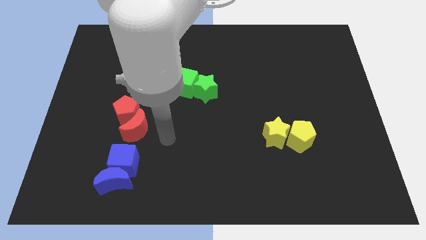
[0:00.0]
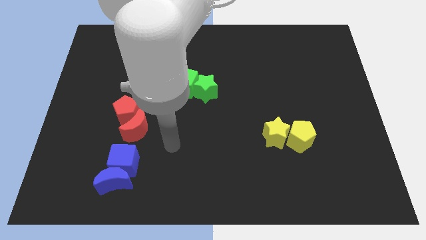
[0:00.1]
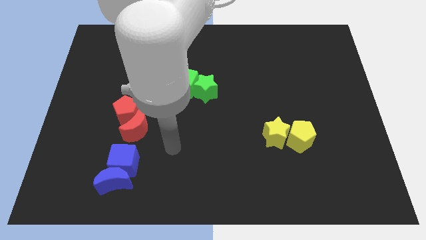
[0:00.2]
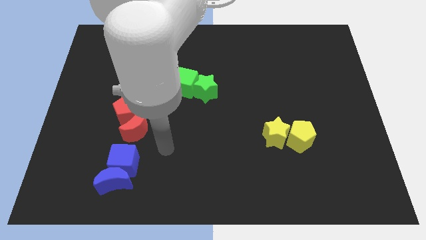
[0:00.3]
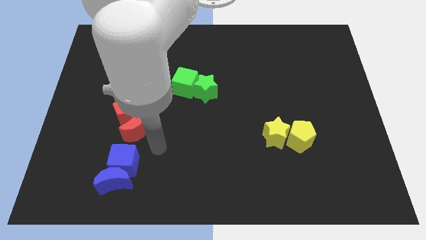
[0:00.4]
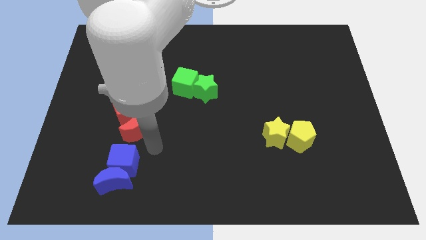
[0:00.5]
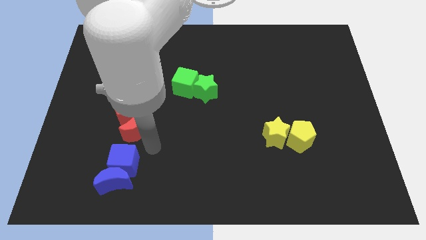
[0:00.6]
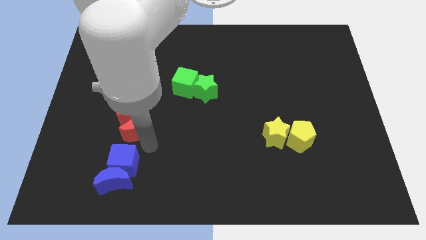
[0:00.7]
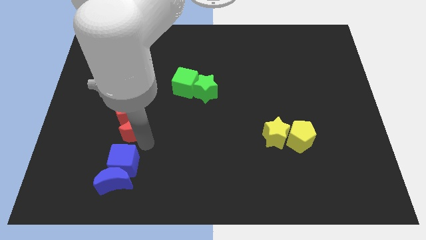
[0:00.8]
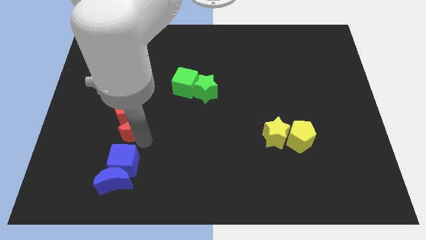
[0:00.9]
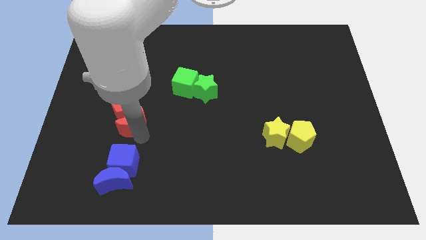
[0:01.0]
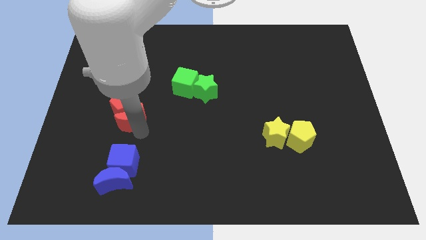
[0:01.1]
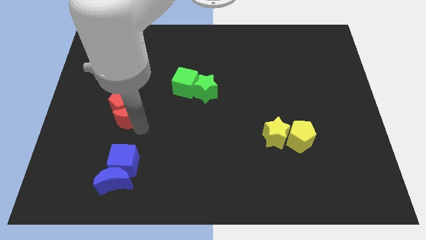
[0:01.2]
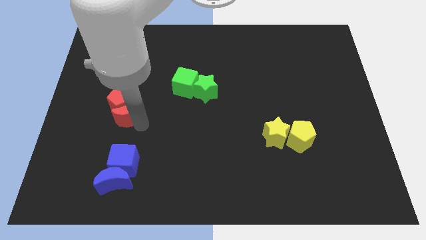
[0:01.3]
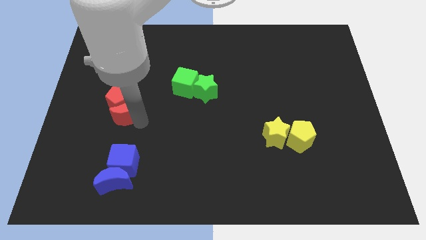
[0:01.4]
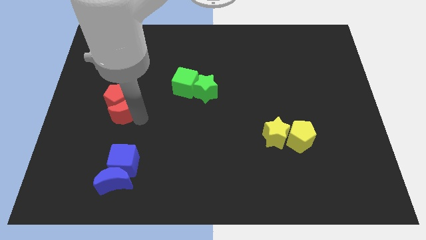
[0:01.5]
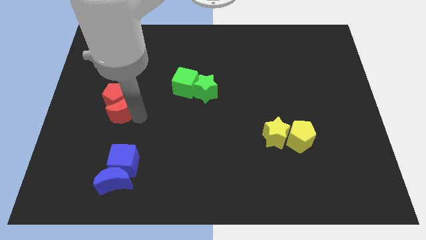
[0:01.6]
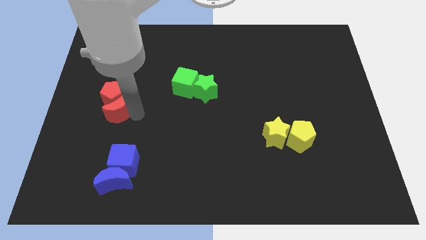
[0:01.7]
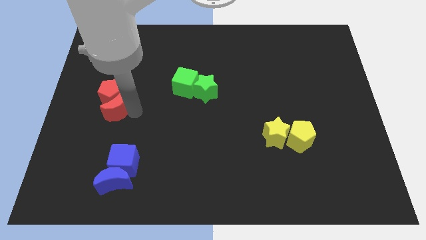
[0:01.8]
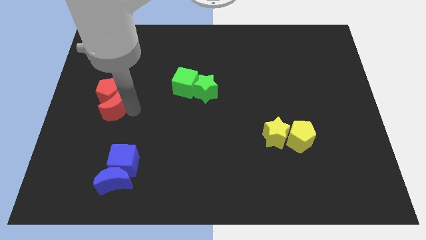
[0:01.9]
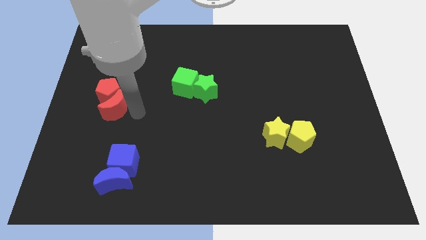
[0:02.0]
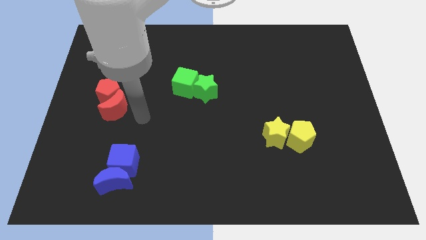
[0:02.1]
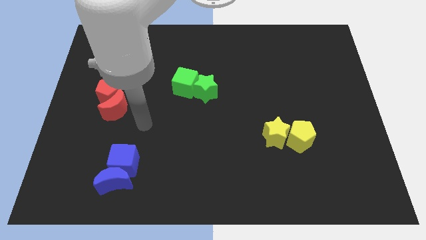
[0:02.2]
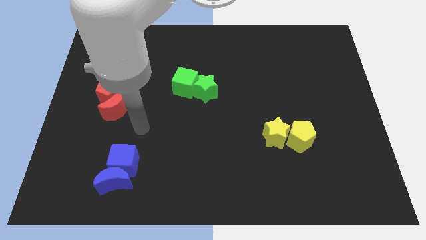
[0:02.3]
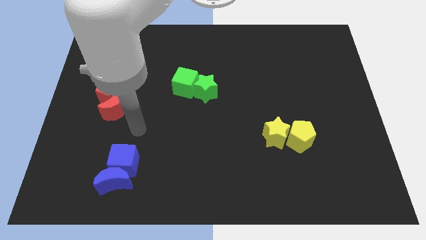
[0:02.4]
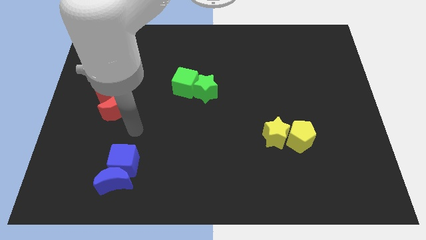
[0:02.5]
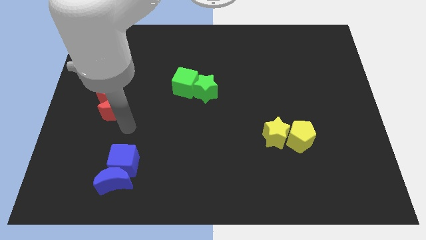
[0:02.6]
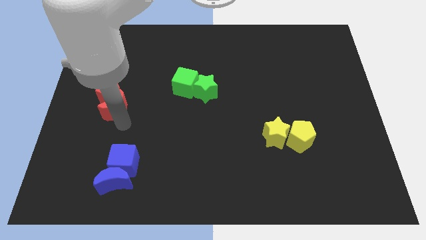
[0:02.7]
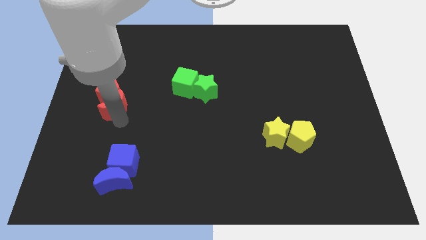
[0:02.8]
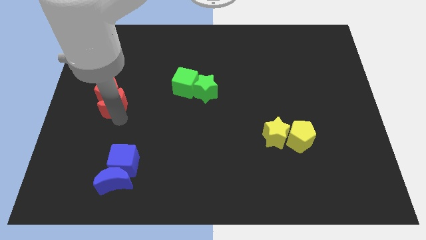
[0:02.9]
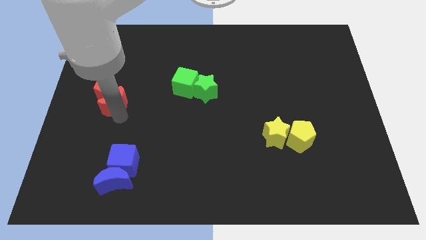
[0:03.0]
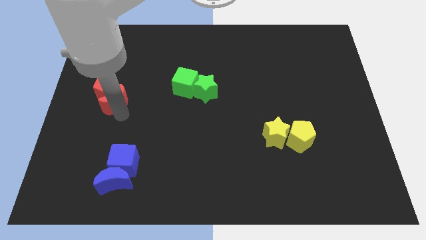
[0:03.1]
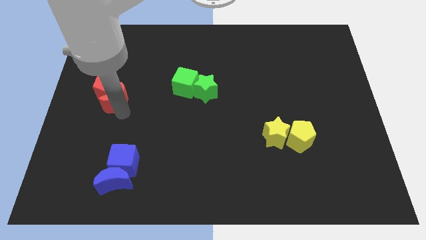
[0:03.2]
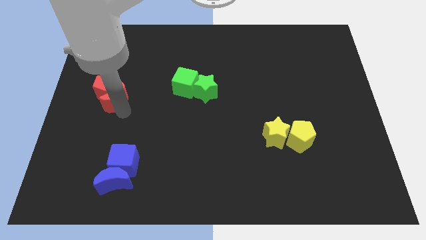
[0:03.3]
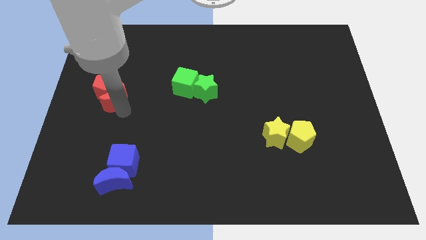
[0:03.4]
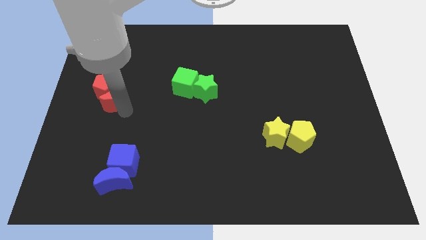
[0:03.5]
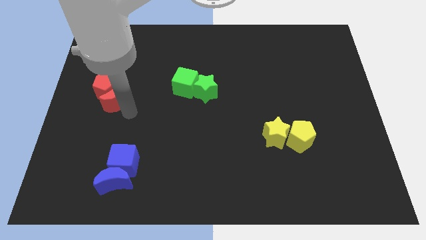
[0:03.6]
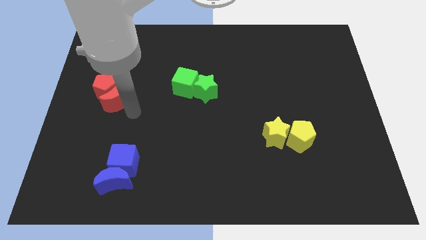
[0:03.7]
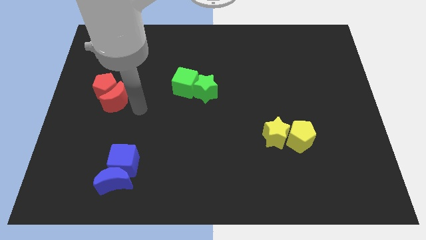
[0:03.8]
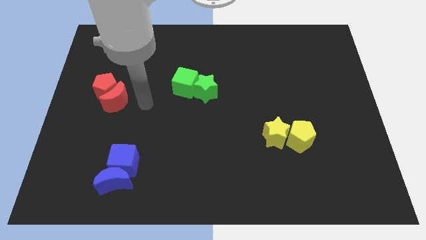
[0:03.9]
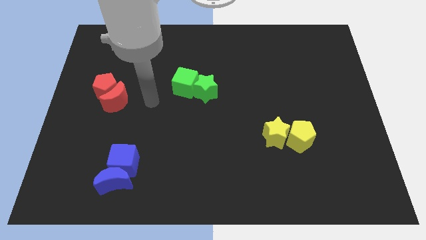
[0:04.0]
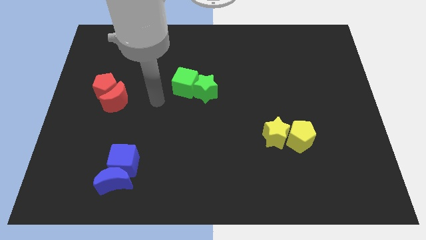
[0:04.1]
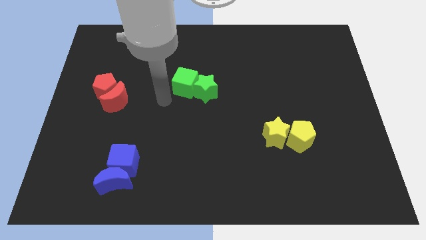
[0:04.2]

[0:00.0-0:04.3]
move both the red pentagon and red crescent towards the center left

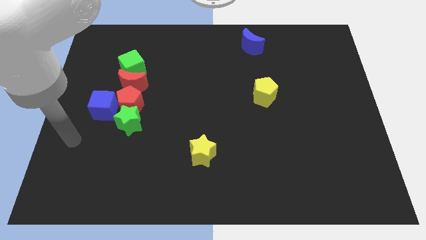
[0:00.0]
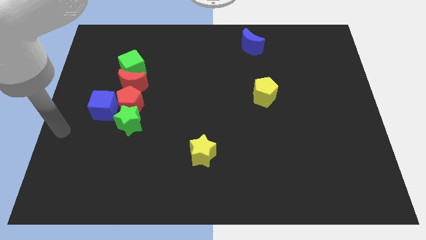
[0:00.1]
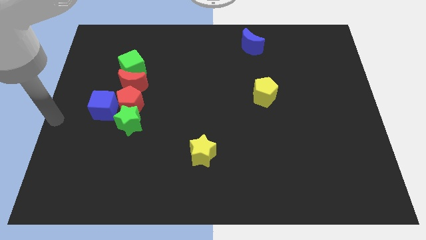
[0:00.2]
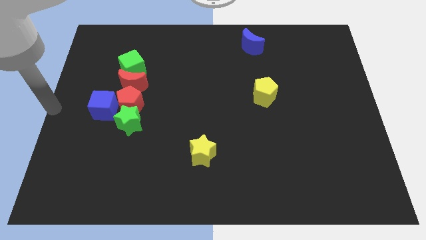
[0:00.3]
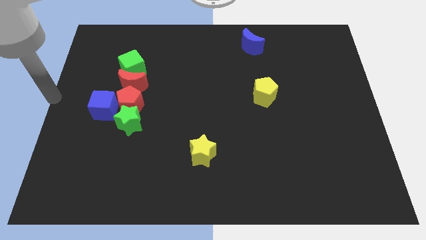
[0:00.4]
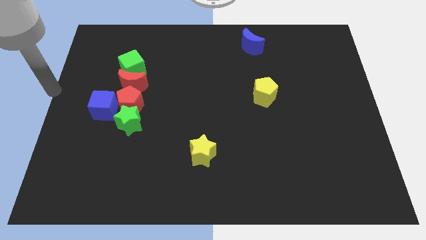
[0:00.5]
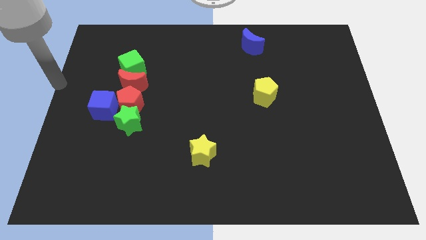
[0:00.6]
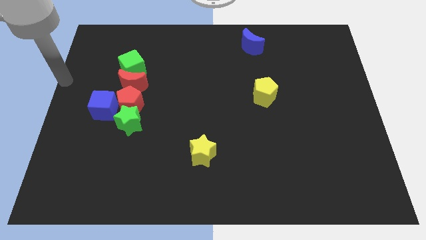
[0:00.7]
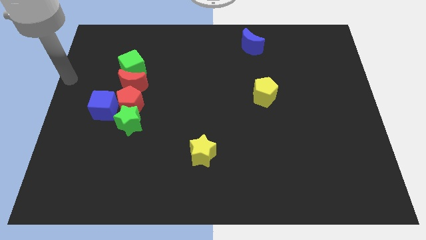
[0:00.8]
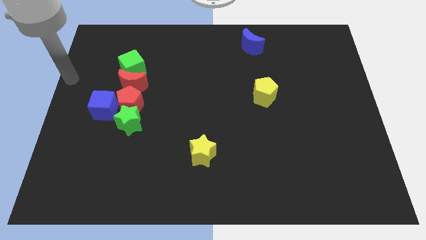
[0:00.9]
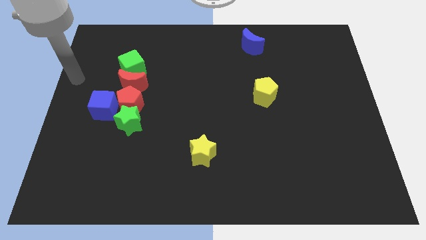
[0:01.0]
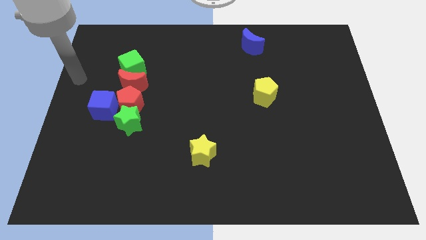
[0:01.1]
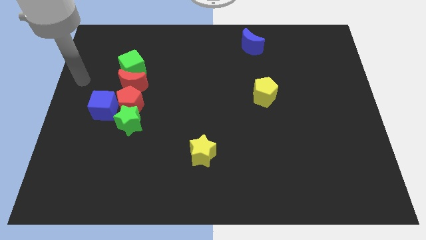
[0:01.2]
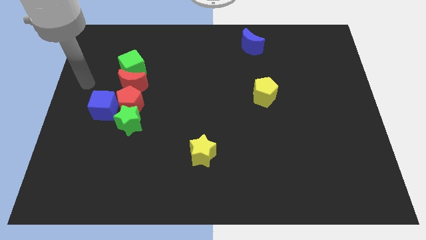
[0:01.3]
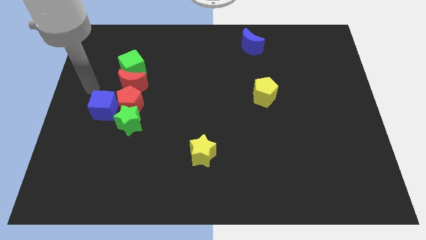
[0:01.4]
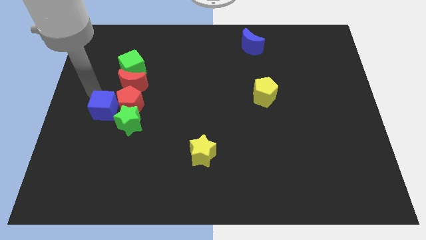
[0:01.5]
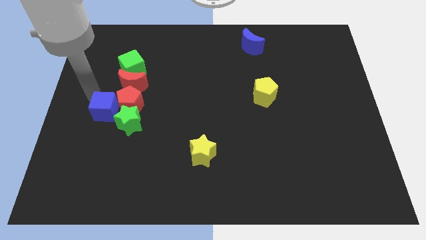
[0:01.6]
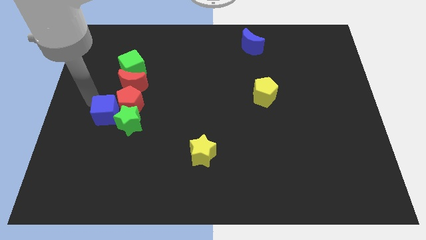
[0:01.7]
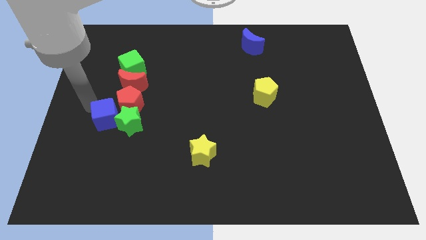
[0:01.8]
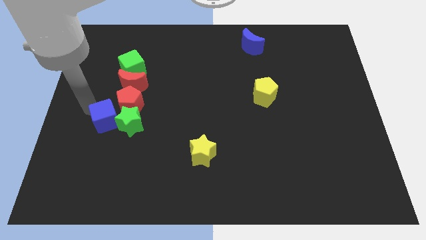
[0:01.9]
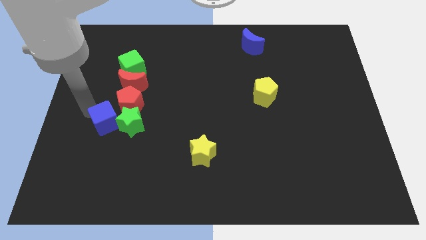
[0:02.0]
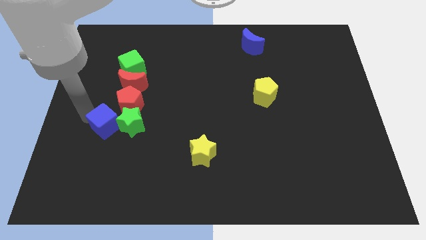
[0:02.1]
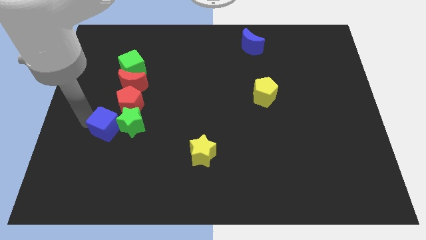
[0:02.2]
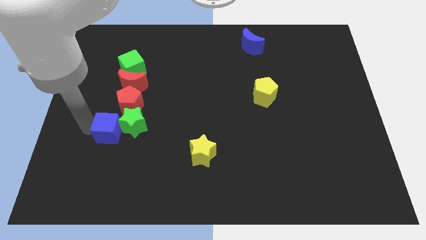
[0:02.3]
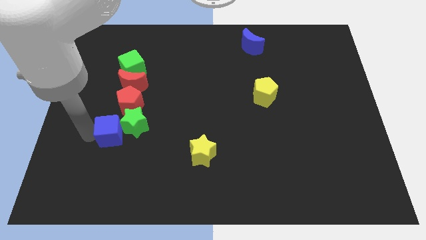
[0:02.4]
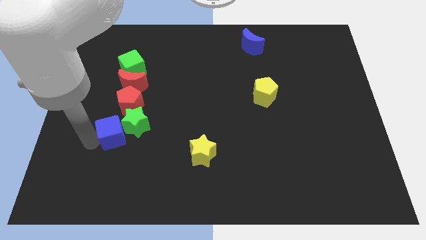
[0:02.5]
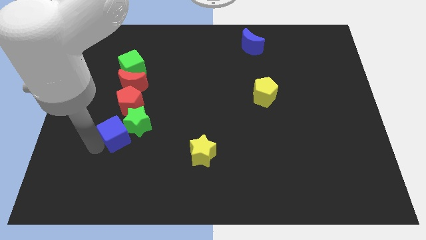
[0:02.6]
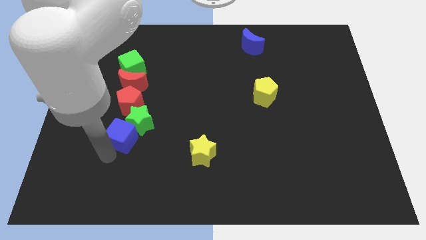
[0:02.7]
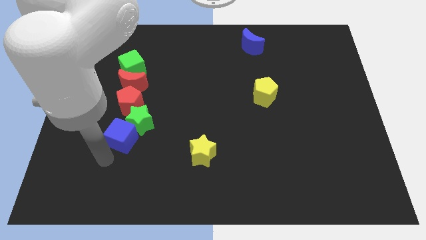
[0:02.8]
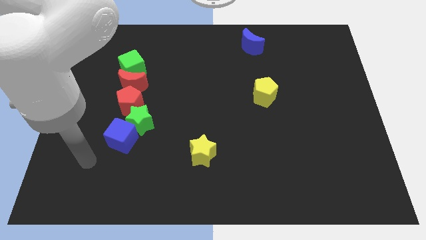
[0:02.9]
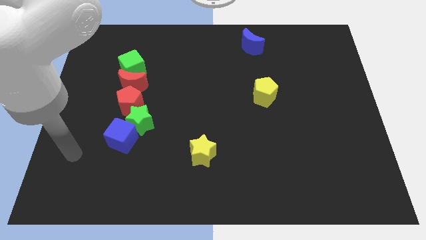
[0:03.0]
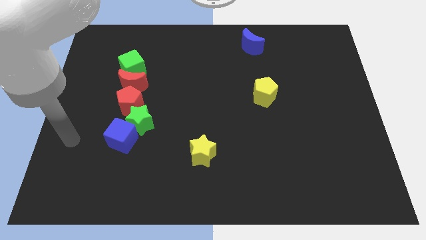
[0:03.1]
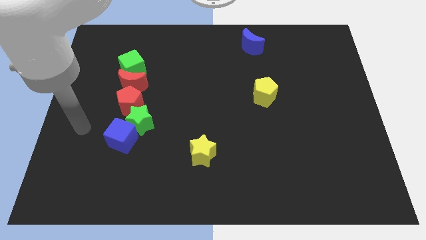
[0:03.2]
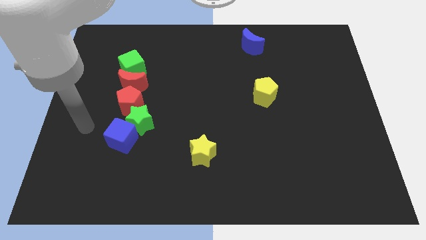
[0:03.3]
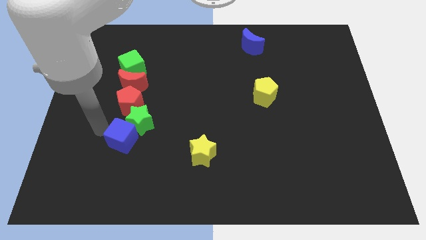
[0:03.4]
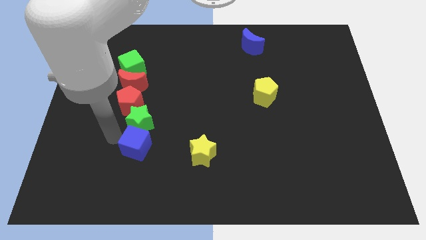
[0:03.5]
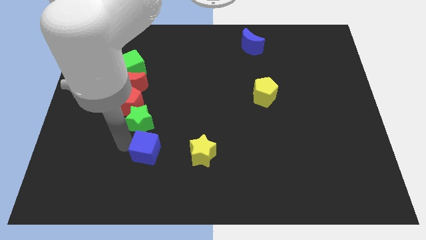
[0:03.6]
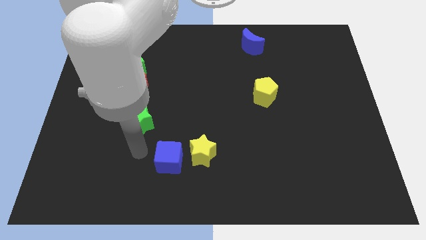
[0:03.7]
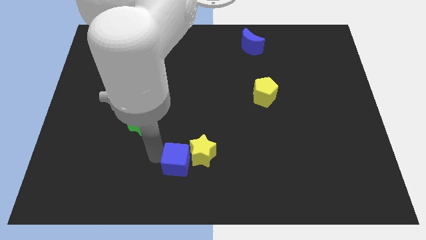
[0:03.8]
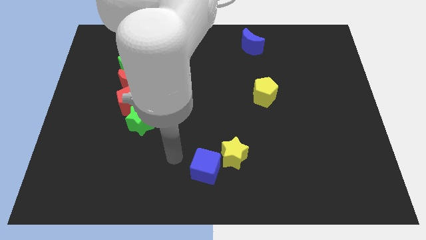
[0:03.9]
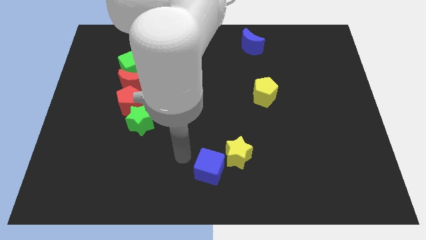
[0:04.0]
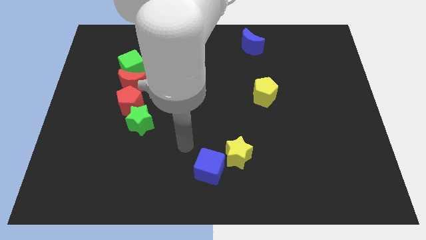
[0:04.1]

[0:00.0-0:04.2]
push the blue cube towards the downward

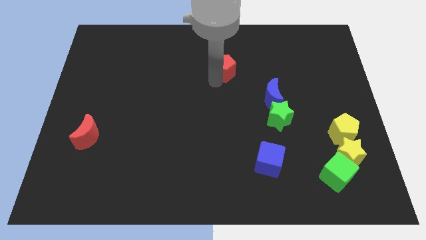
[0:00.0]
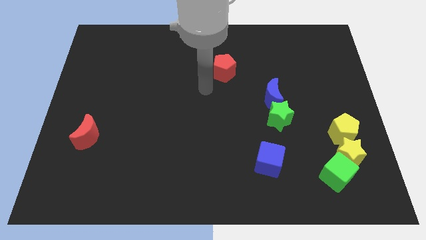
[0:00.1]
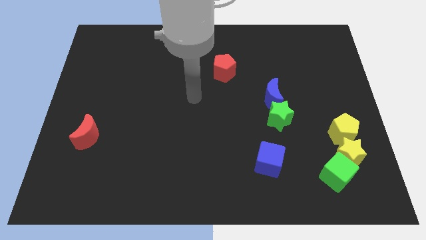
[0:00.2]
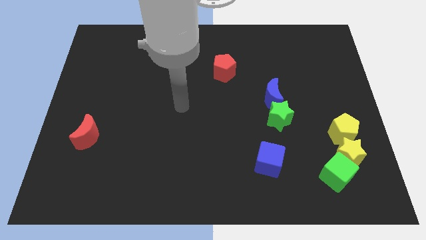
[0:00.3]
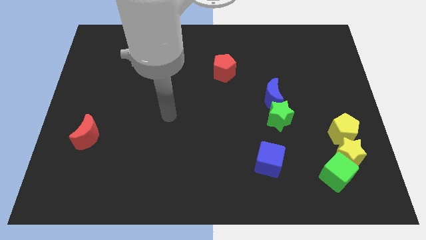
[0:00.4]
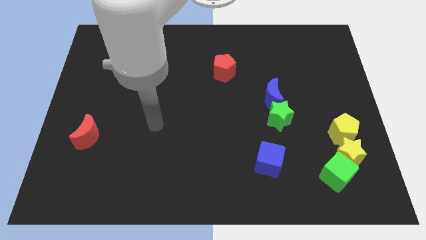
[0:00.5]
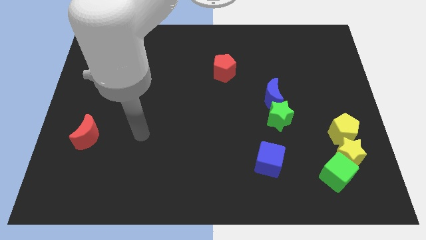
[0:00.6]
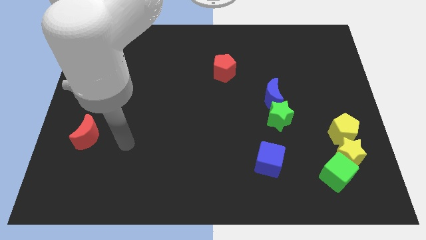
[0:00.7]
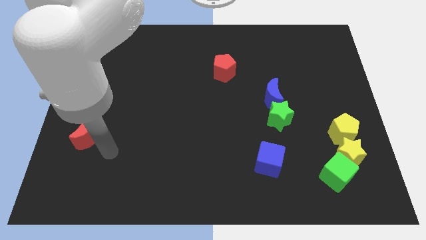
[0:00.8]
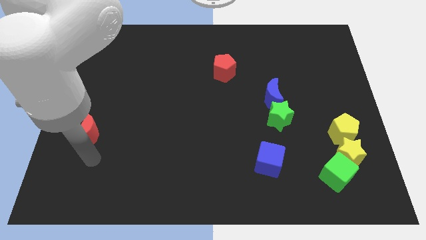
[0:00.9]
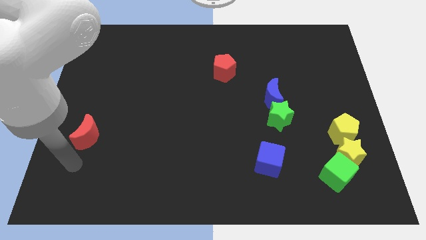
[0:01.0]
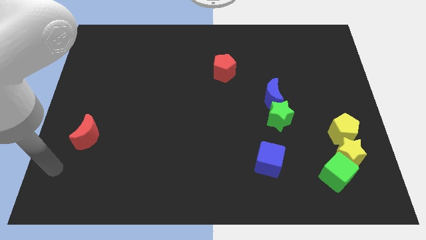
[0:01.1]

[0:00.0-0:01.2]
move your arm towards the bottom of the board
